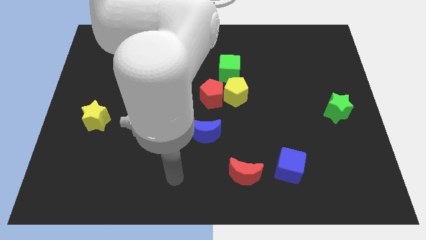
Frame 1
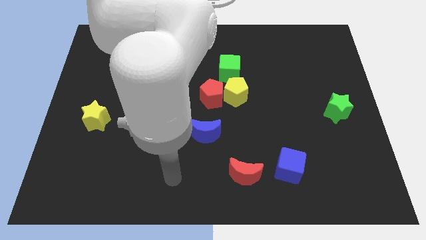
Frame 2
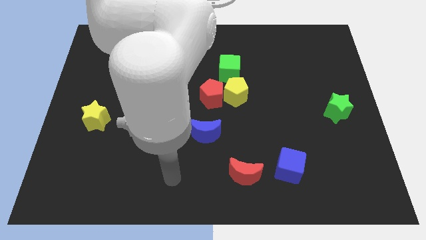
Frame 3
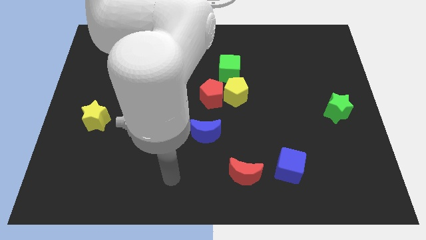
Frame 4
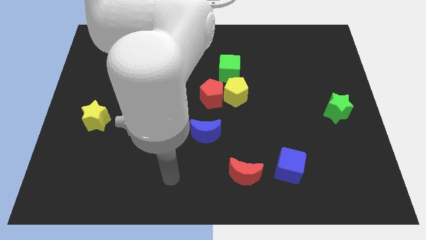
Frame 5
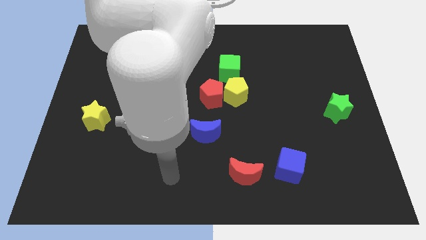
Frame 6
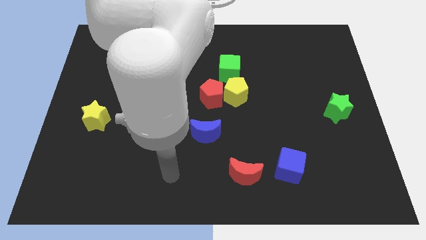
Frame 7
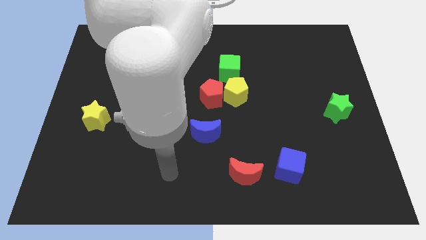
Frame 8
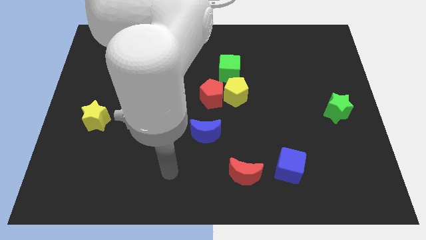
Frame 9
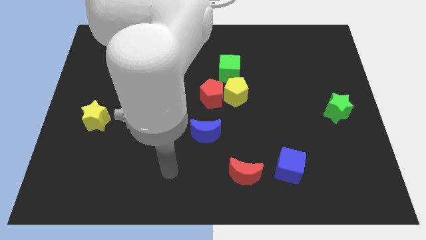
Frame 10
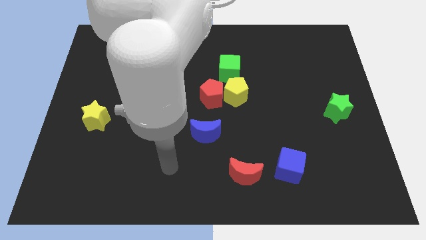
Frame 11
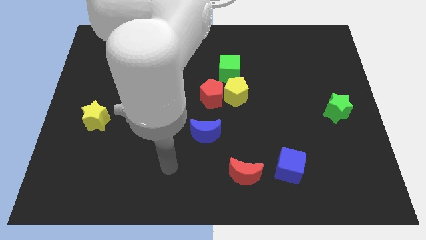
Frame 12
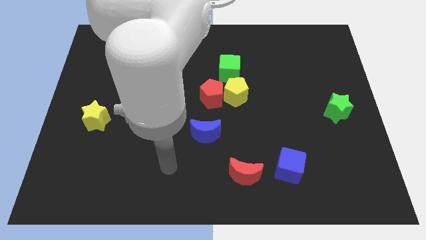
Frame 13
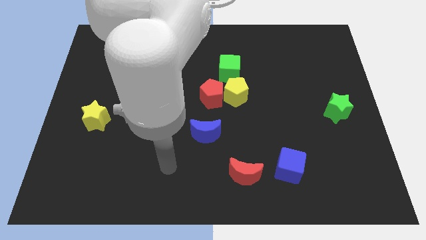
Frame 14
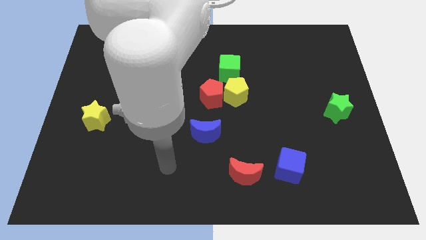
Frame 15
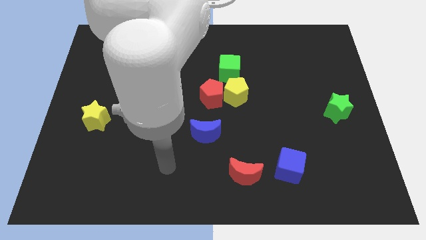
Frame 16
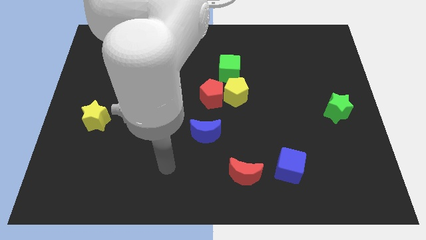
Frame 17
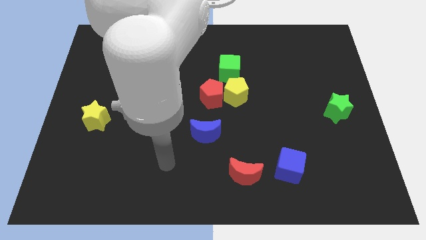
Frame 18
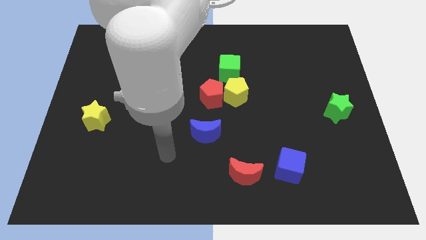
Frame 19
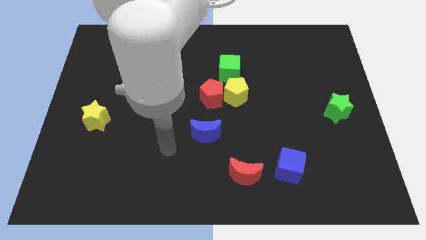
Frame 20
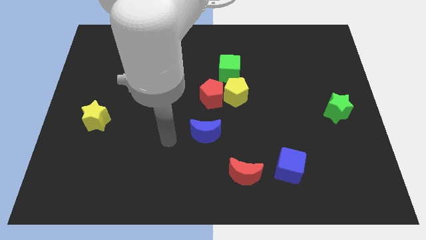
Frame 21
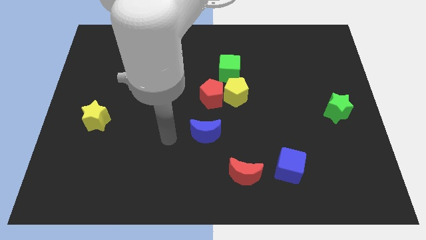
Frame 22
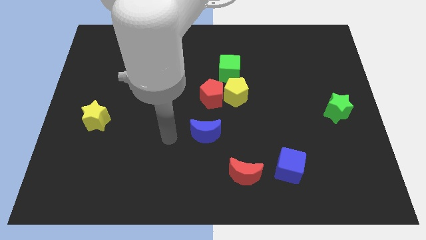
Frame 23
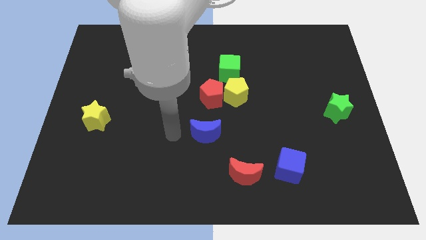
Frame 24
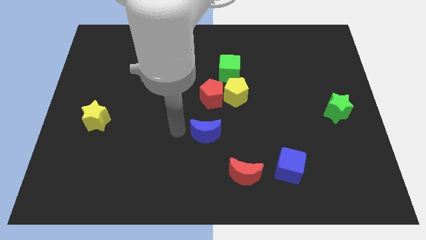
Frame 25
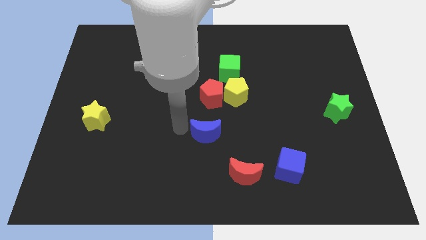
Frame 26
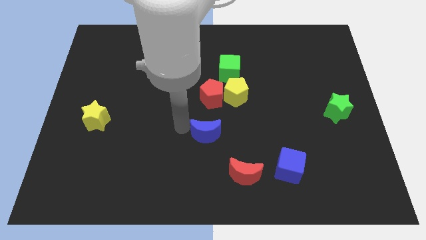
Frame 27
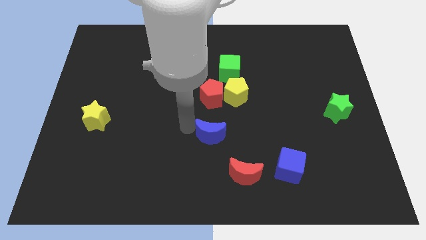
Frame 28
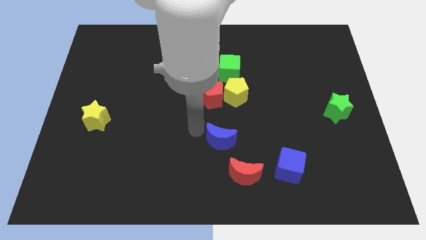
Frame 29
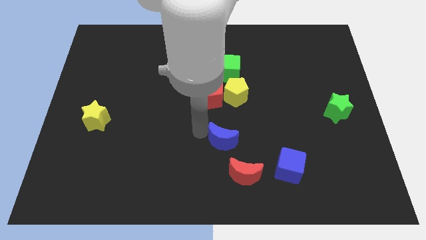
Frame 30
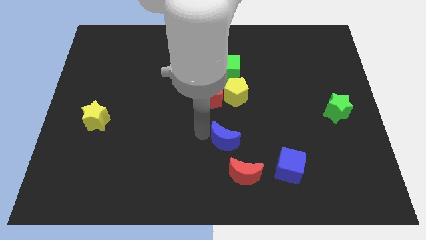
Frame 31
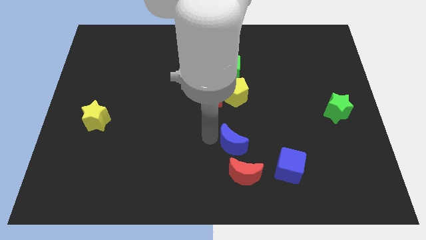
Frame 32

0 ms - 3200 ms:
place the blue crescent above the yellow pentagon

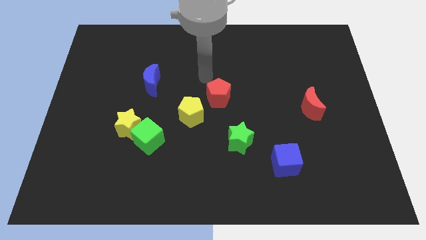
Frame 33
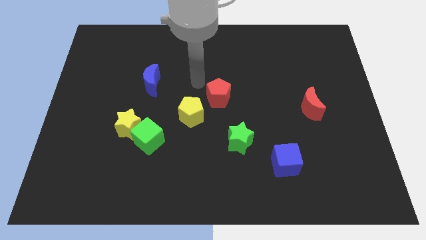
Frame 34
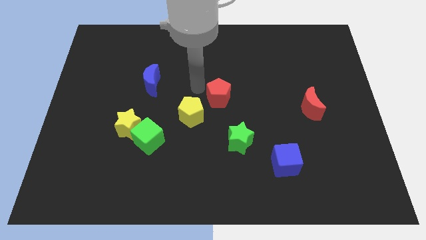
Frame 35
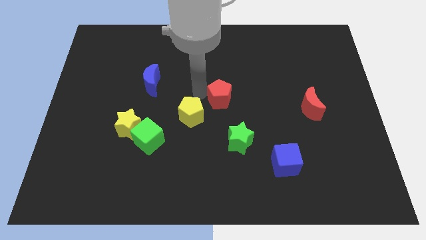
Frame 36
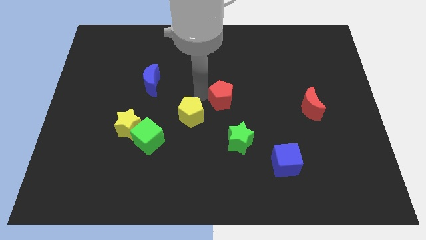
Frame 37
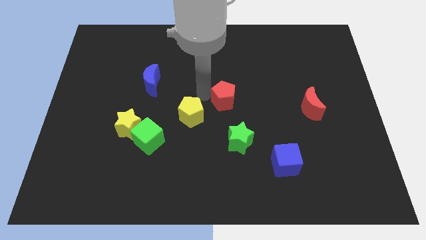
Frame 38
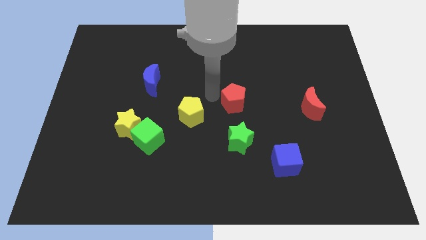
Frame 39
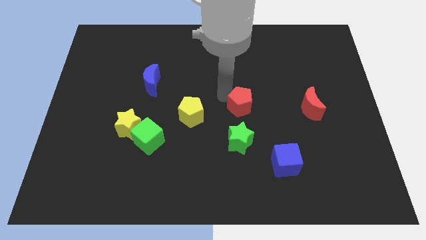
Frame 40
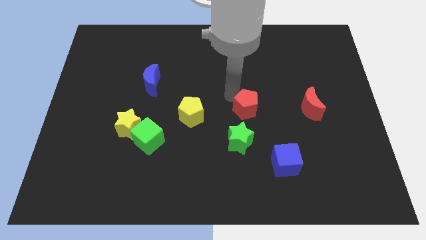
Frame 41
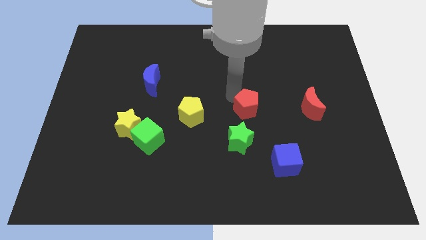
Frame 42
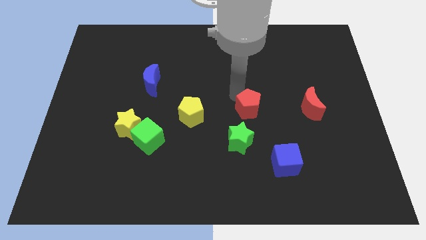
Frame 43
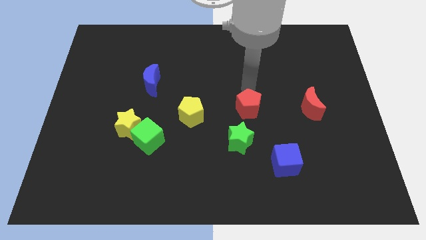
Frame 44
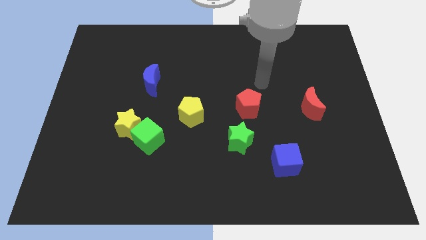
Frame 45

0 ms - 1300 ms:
place red pentagon to the top of green star

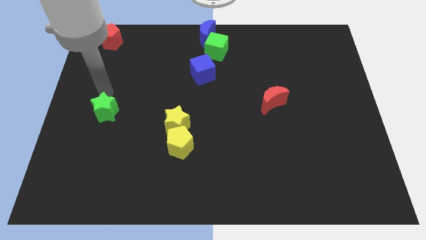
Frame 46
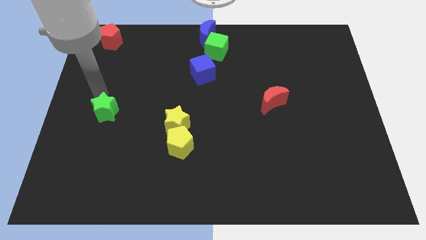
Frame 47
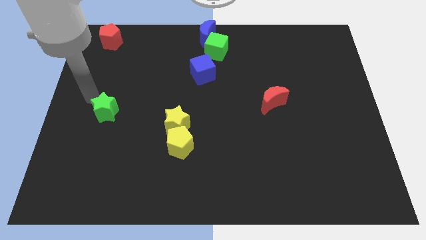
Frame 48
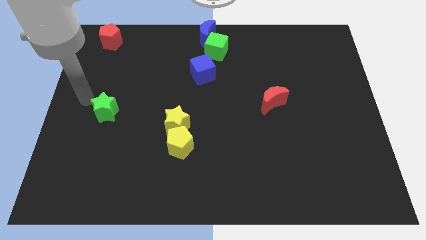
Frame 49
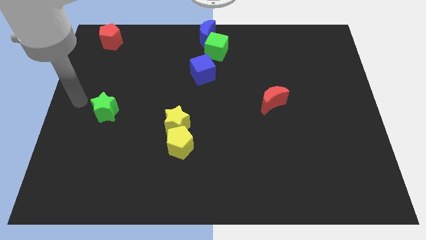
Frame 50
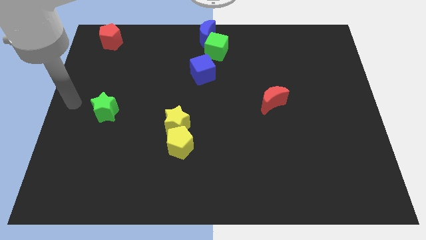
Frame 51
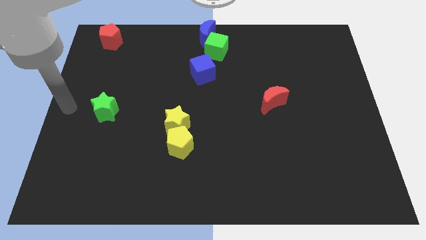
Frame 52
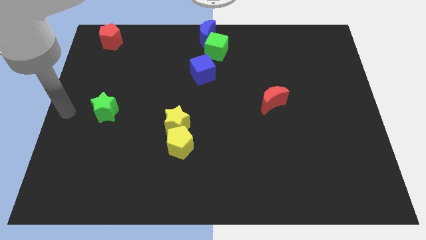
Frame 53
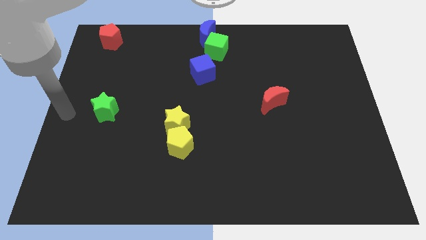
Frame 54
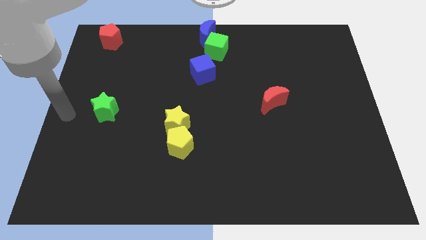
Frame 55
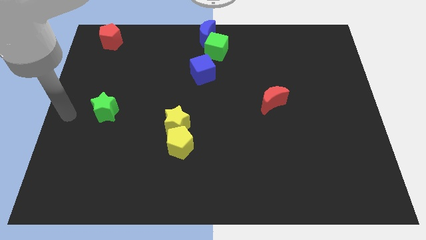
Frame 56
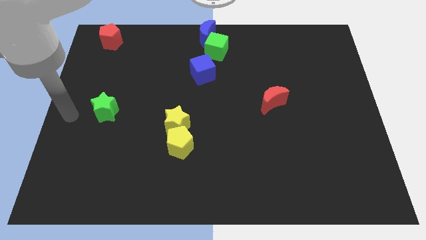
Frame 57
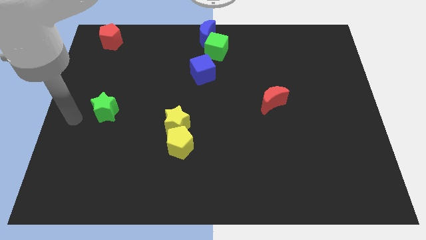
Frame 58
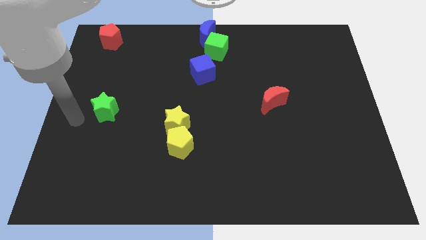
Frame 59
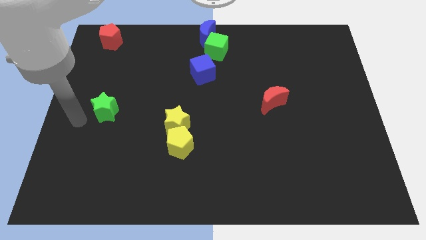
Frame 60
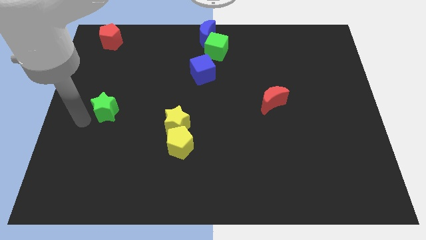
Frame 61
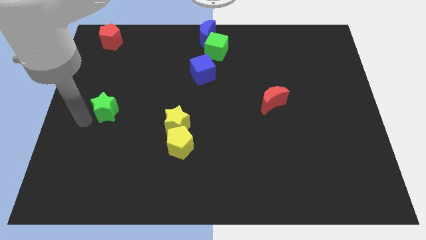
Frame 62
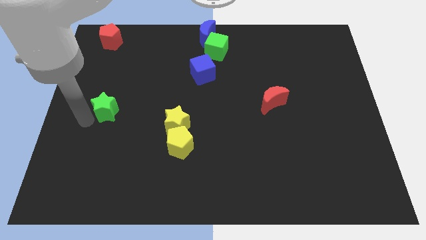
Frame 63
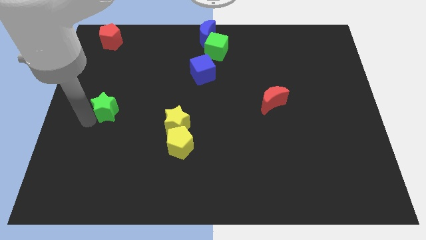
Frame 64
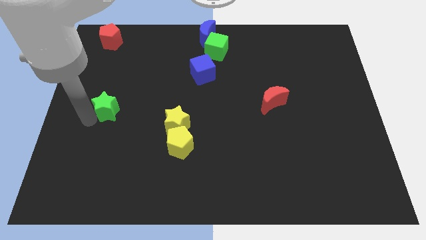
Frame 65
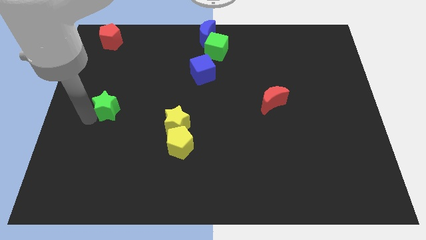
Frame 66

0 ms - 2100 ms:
move the arm to the green star

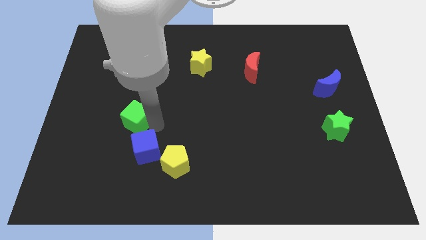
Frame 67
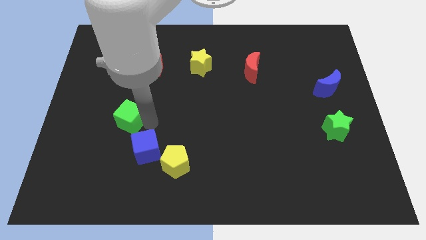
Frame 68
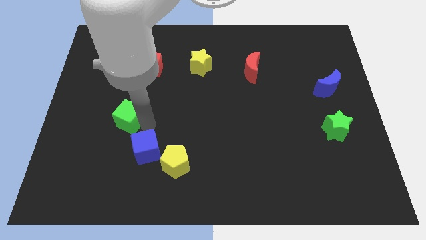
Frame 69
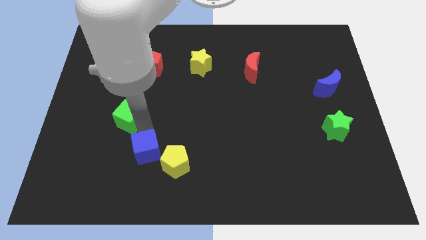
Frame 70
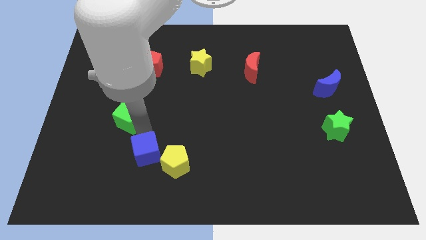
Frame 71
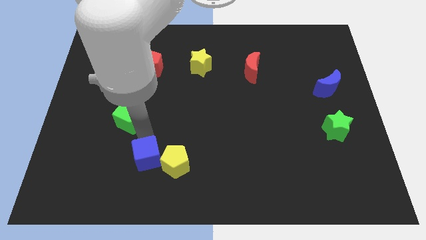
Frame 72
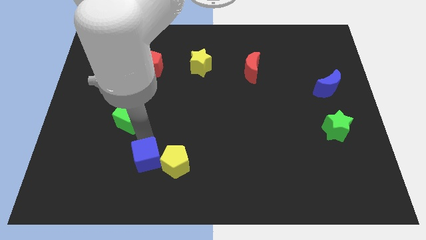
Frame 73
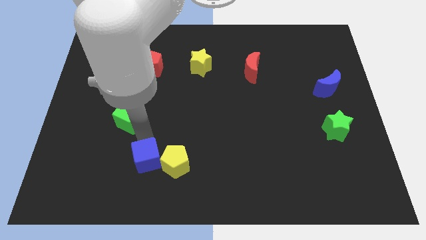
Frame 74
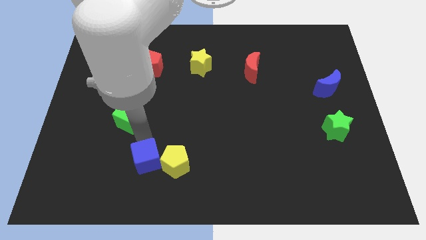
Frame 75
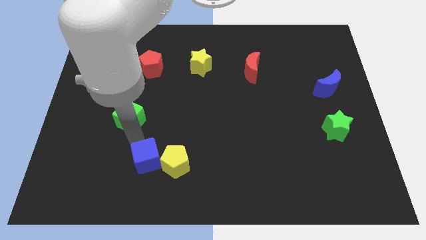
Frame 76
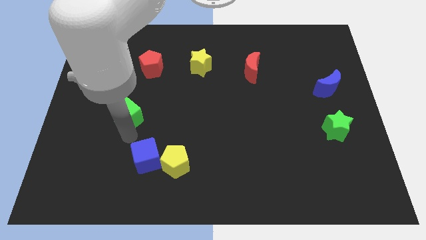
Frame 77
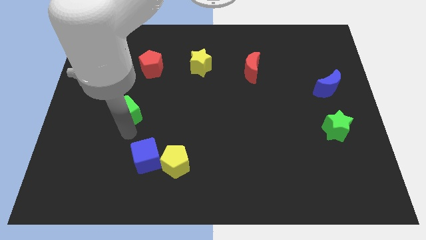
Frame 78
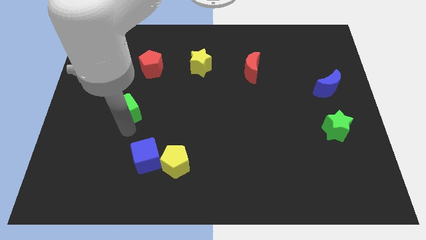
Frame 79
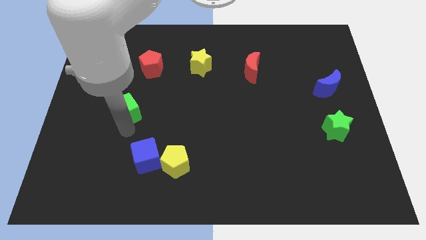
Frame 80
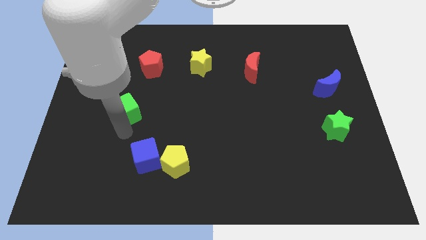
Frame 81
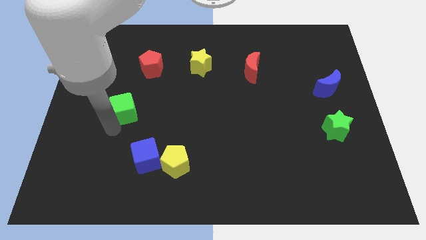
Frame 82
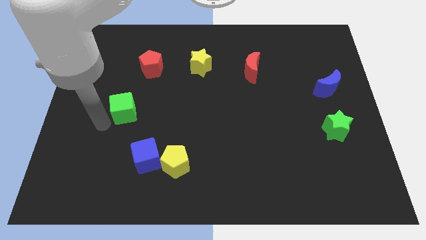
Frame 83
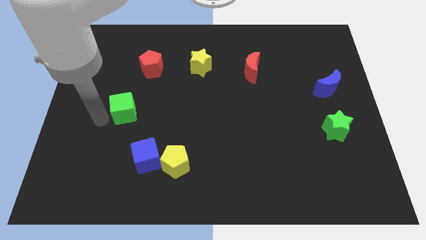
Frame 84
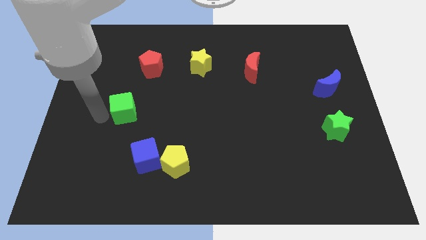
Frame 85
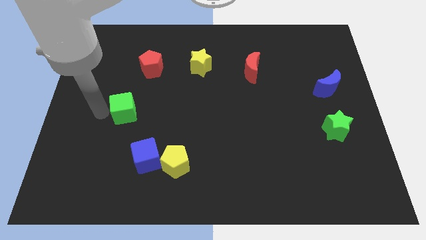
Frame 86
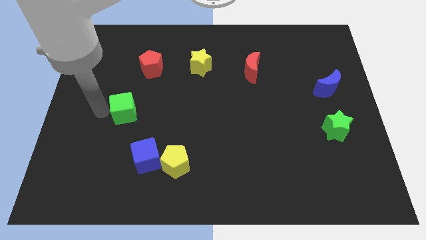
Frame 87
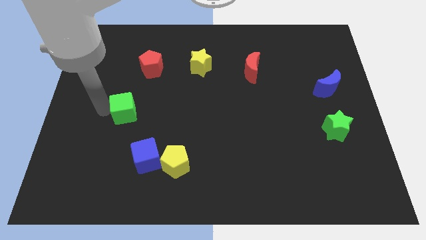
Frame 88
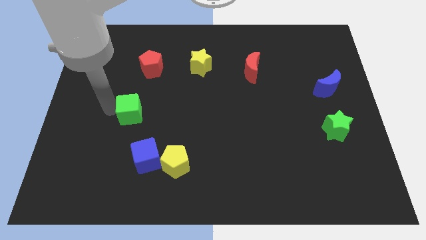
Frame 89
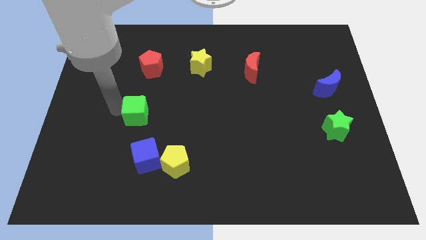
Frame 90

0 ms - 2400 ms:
separate the blue and green cubes
